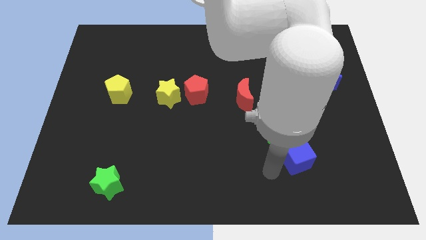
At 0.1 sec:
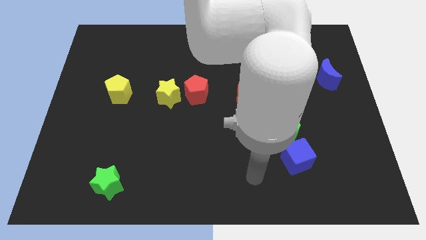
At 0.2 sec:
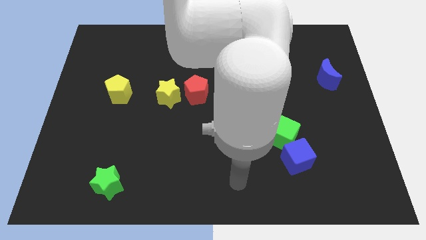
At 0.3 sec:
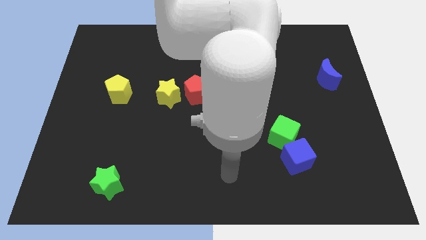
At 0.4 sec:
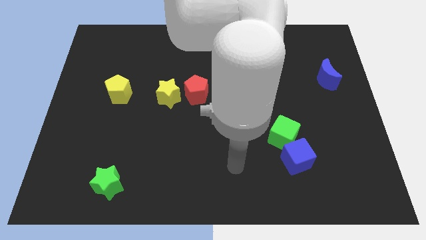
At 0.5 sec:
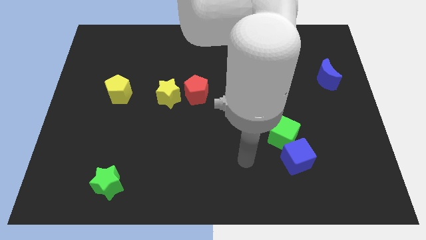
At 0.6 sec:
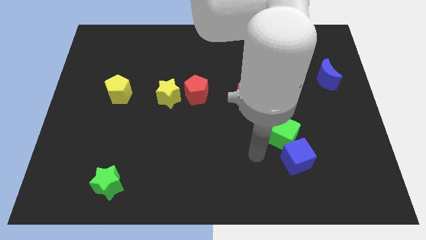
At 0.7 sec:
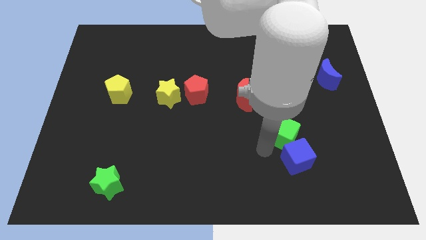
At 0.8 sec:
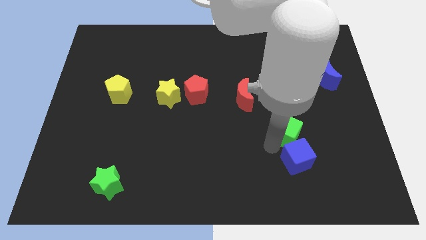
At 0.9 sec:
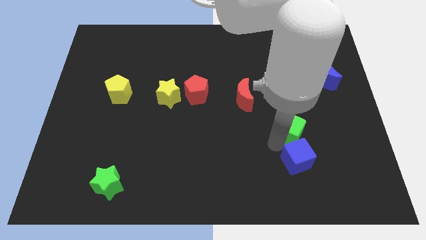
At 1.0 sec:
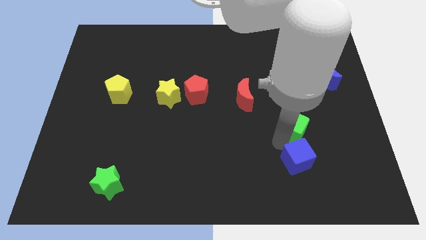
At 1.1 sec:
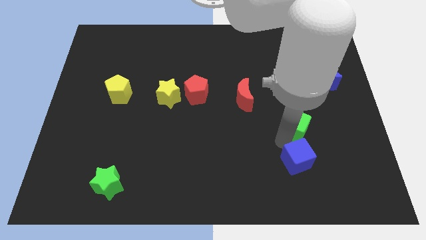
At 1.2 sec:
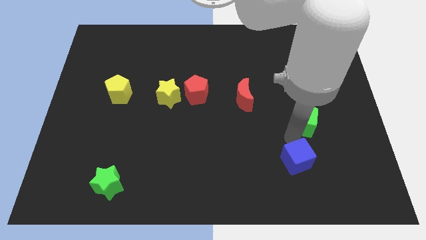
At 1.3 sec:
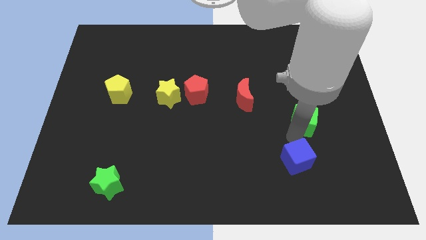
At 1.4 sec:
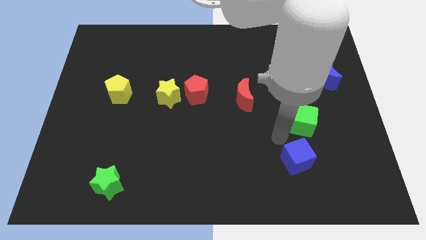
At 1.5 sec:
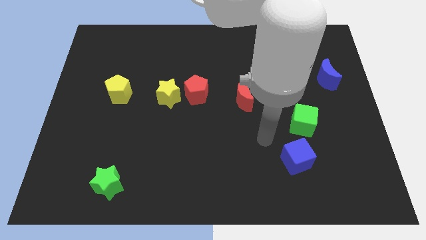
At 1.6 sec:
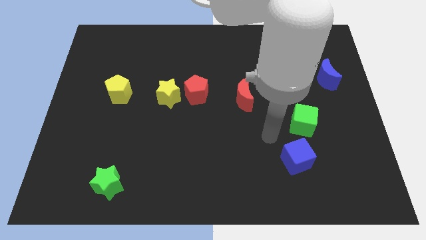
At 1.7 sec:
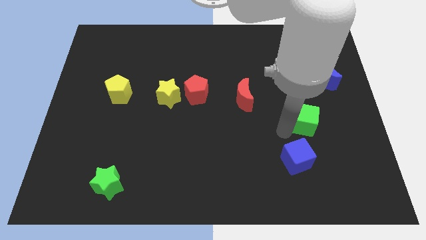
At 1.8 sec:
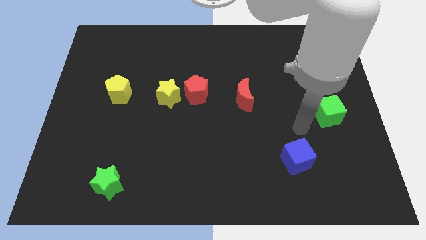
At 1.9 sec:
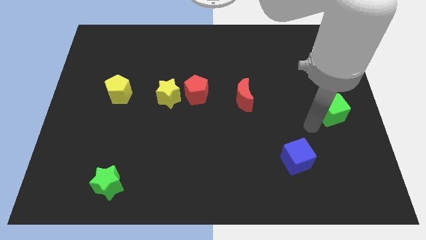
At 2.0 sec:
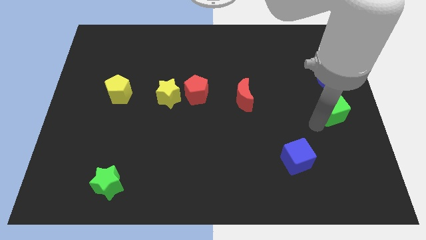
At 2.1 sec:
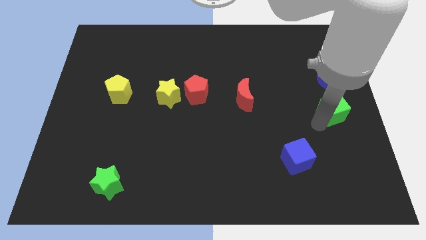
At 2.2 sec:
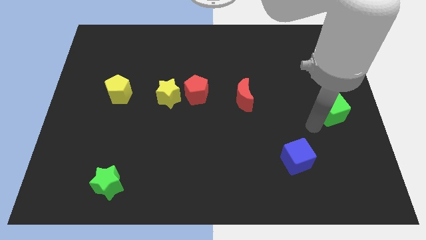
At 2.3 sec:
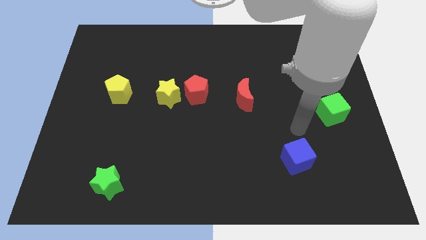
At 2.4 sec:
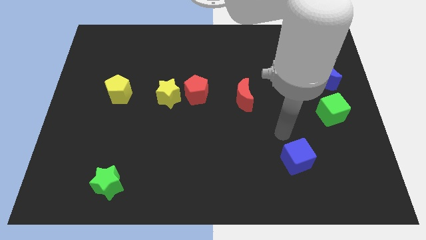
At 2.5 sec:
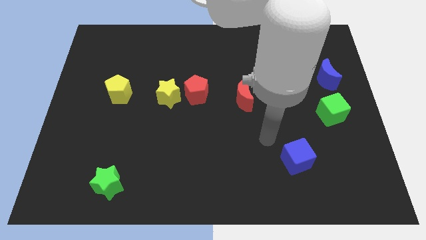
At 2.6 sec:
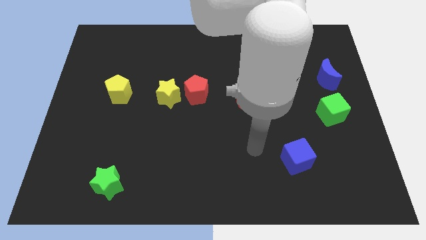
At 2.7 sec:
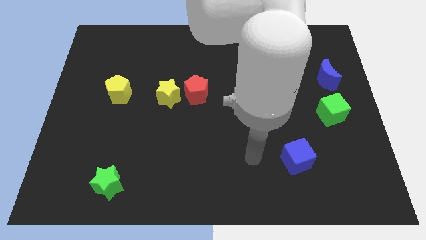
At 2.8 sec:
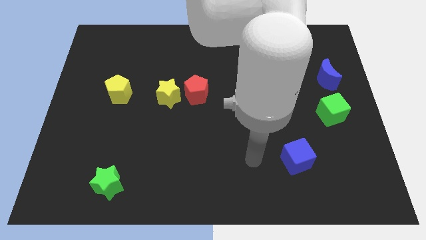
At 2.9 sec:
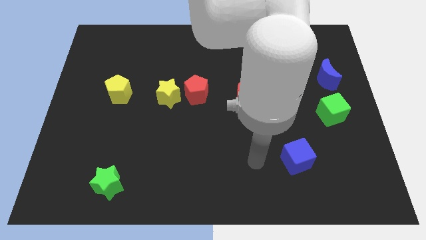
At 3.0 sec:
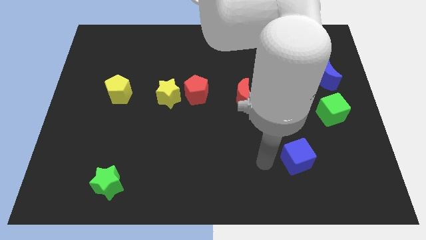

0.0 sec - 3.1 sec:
push the green cube to the right side of the board

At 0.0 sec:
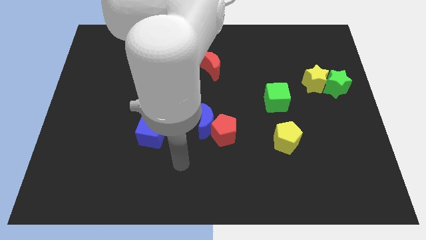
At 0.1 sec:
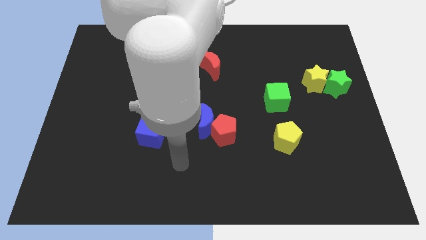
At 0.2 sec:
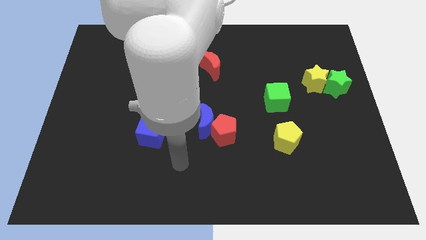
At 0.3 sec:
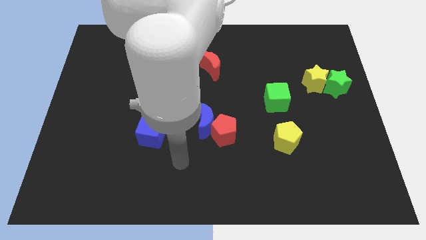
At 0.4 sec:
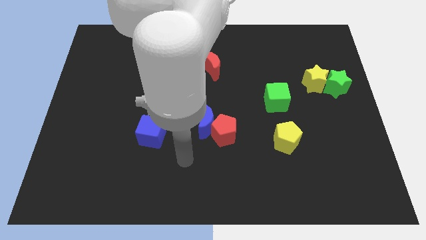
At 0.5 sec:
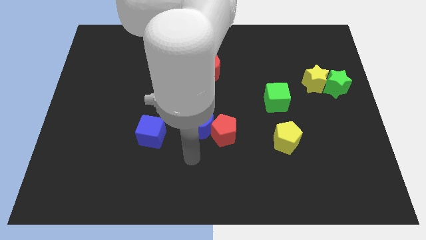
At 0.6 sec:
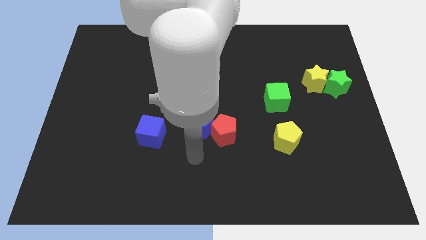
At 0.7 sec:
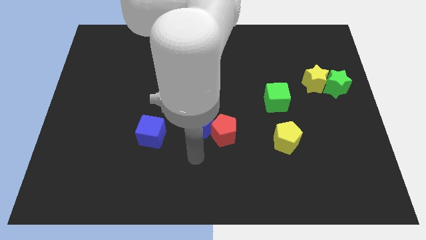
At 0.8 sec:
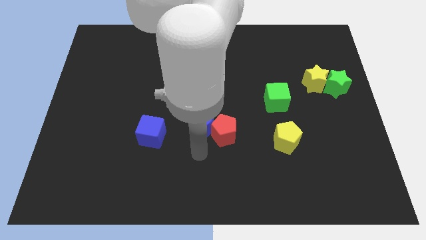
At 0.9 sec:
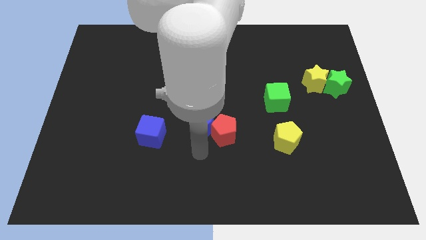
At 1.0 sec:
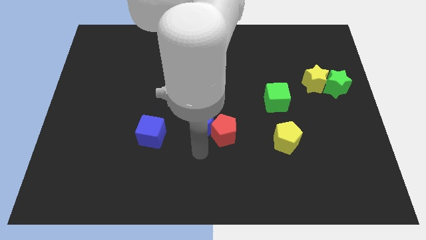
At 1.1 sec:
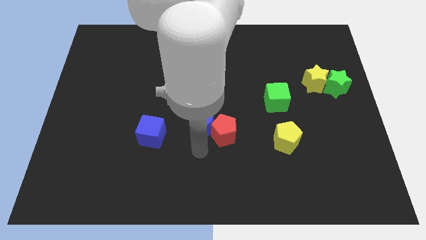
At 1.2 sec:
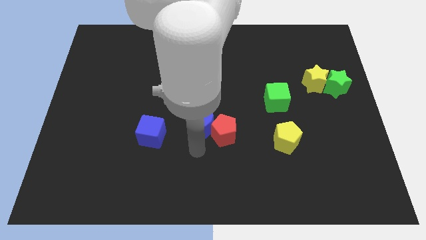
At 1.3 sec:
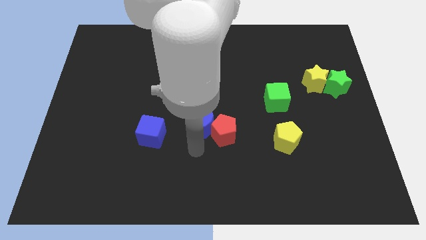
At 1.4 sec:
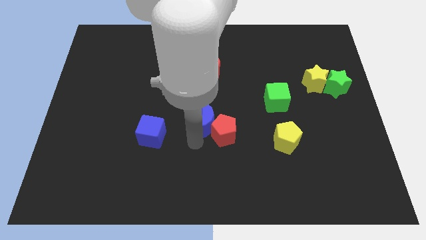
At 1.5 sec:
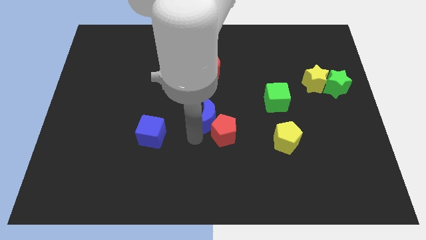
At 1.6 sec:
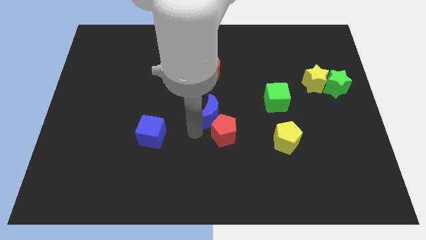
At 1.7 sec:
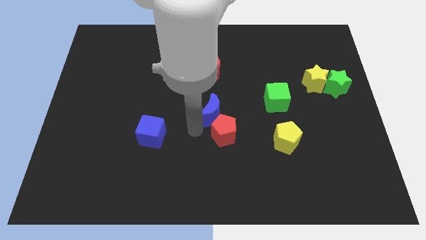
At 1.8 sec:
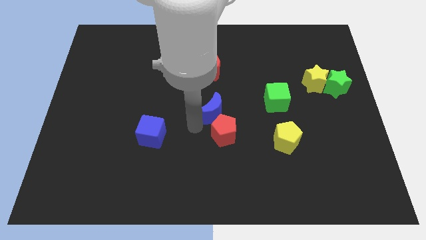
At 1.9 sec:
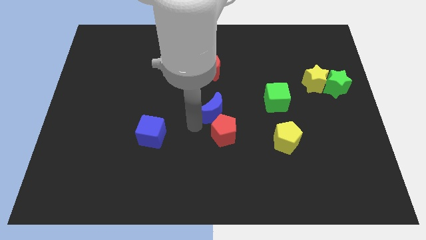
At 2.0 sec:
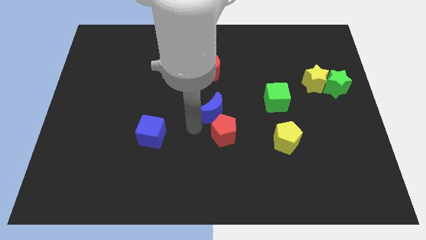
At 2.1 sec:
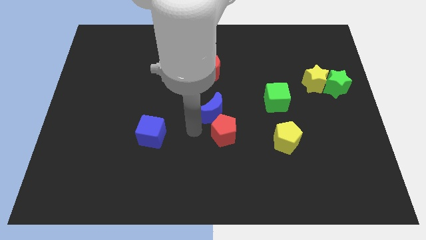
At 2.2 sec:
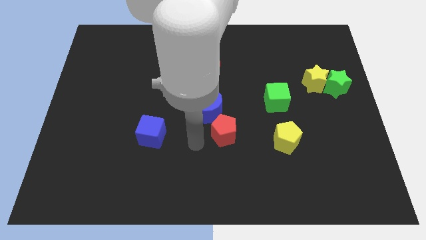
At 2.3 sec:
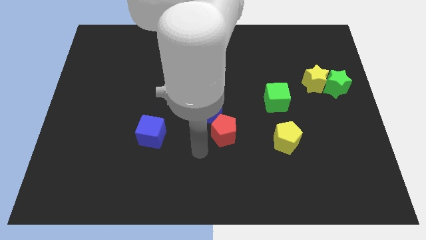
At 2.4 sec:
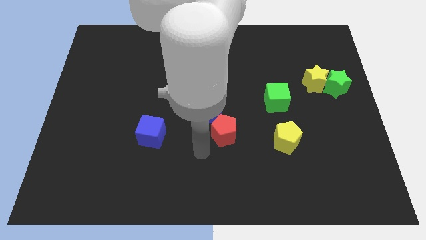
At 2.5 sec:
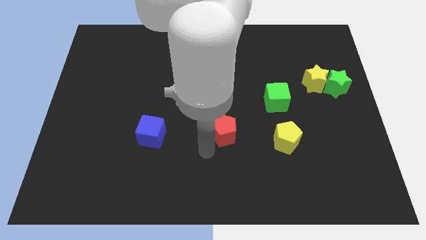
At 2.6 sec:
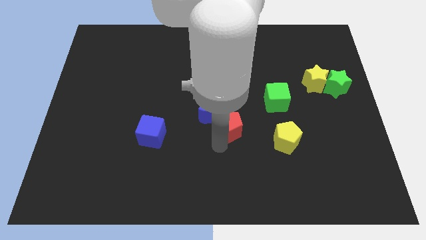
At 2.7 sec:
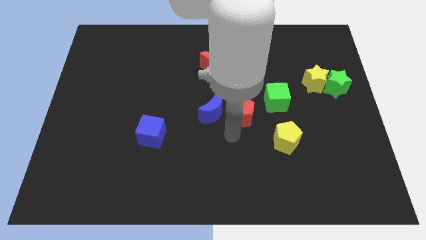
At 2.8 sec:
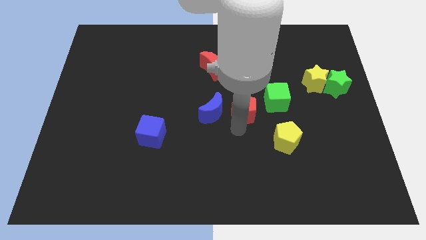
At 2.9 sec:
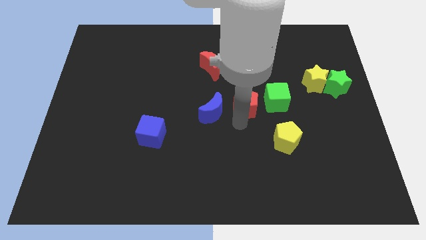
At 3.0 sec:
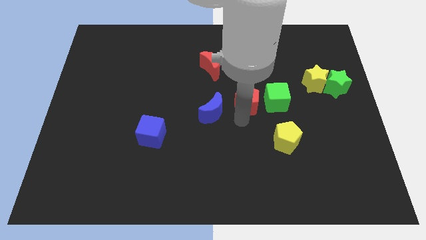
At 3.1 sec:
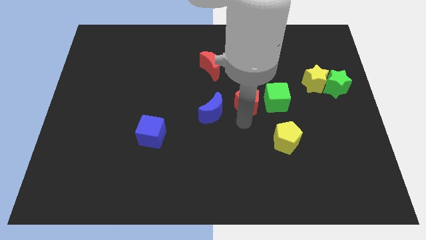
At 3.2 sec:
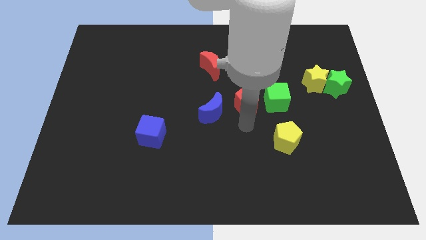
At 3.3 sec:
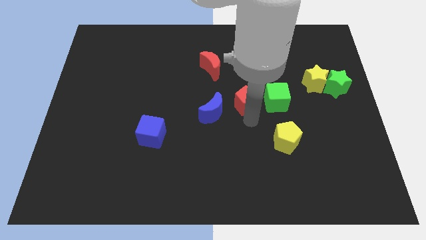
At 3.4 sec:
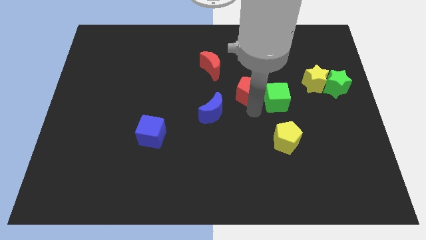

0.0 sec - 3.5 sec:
move blue moon and the red pentagon away from each other

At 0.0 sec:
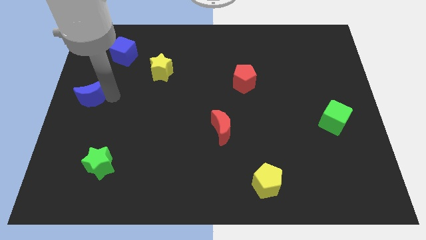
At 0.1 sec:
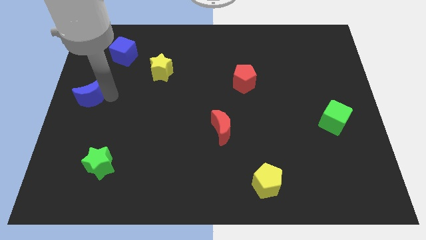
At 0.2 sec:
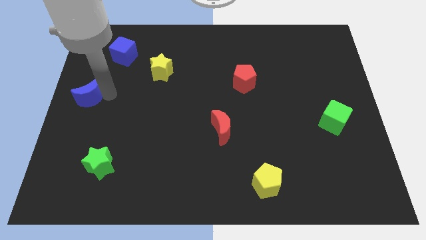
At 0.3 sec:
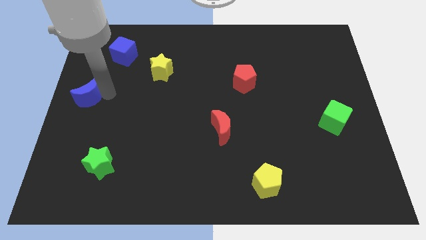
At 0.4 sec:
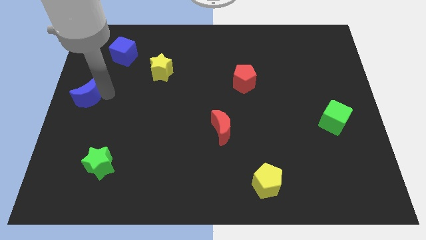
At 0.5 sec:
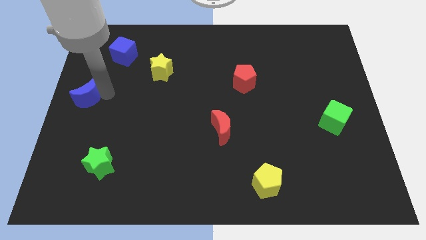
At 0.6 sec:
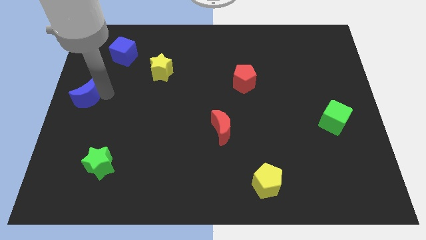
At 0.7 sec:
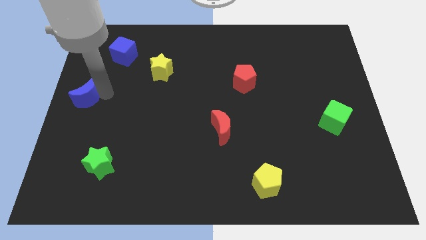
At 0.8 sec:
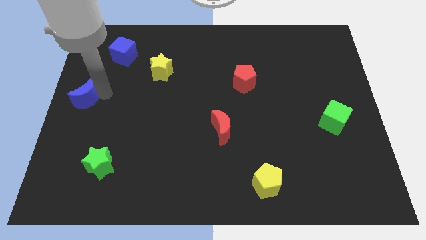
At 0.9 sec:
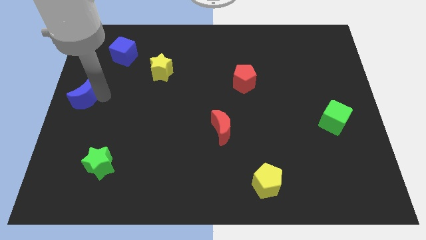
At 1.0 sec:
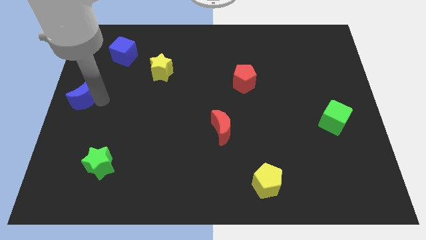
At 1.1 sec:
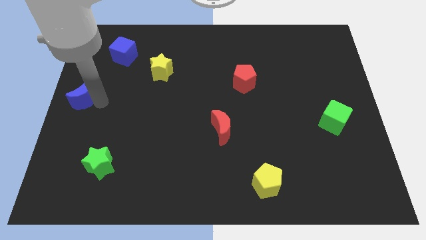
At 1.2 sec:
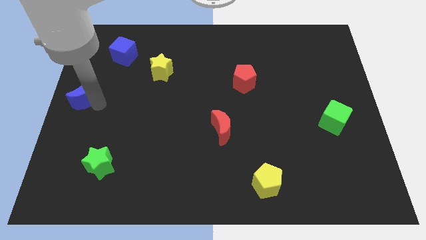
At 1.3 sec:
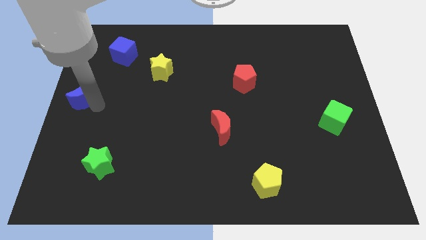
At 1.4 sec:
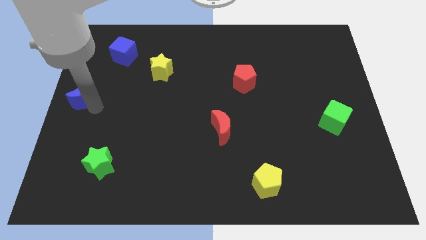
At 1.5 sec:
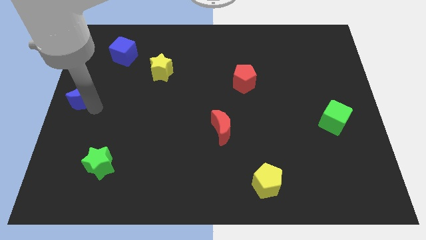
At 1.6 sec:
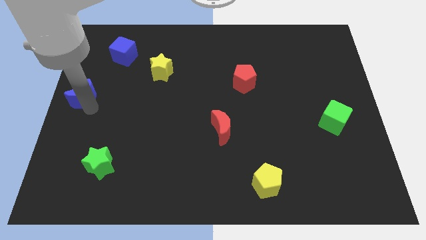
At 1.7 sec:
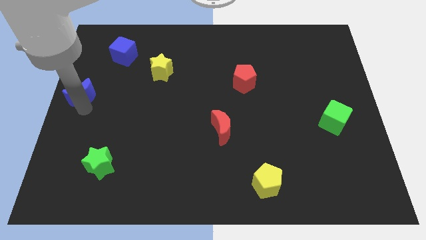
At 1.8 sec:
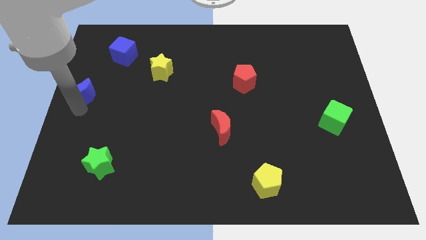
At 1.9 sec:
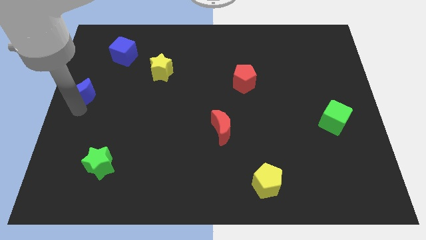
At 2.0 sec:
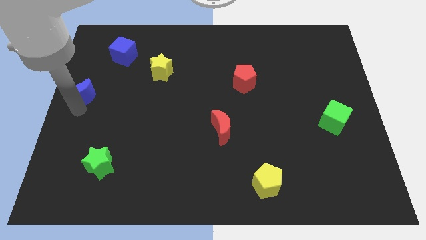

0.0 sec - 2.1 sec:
place the arm behind the blue crescent

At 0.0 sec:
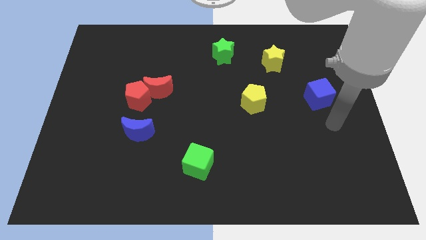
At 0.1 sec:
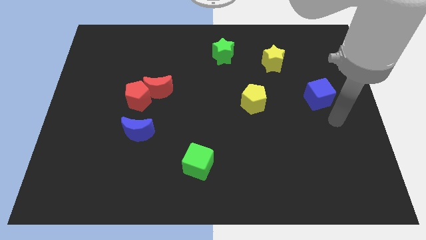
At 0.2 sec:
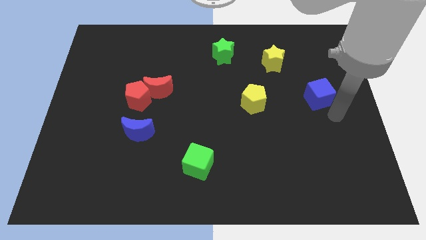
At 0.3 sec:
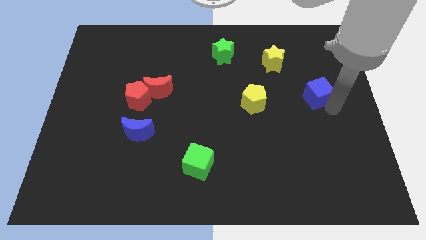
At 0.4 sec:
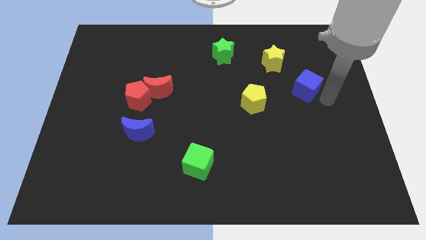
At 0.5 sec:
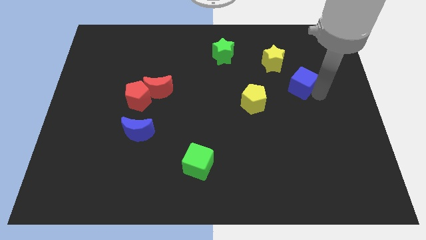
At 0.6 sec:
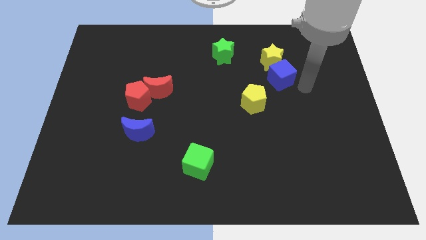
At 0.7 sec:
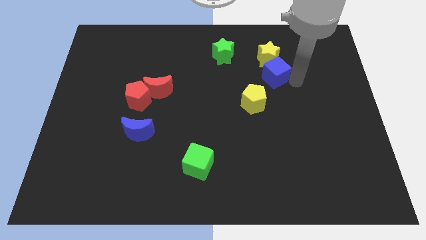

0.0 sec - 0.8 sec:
push blue cube towards yellow star
